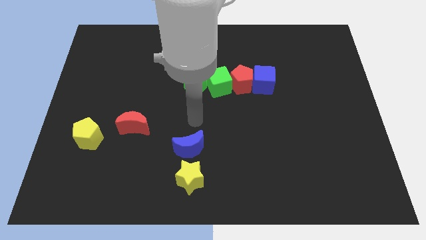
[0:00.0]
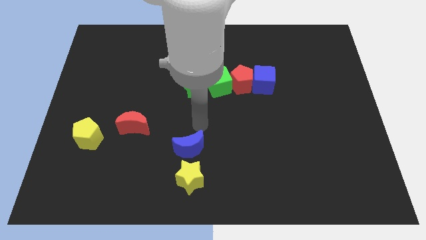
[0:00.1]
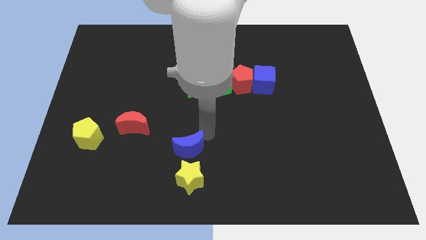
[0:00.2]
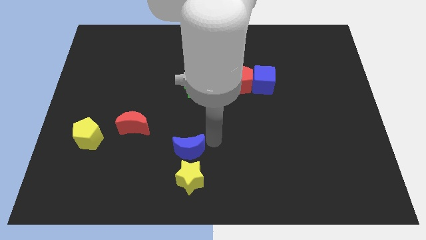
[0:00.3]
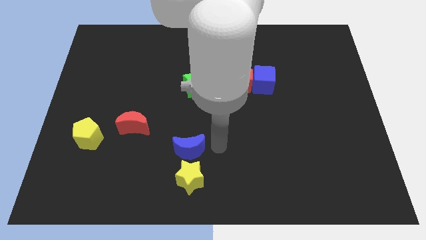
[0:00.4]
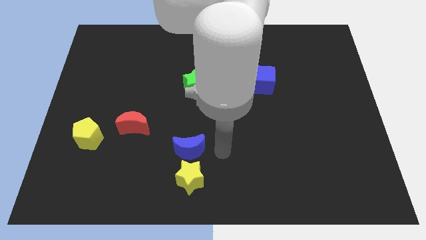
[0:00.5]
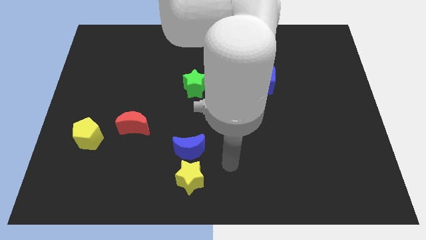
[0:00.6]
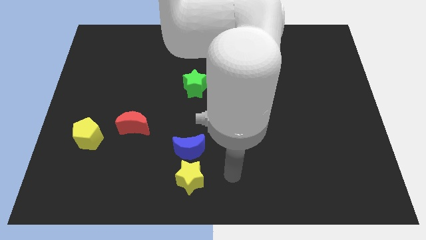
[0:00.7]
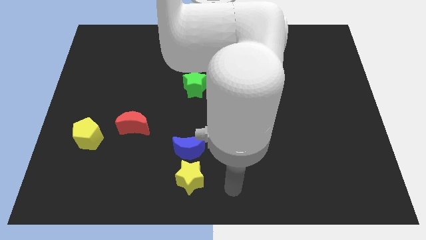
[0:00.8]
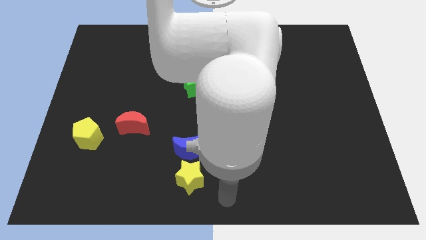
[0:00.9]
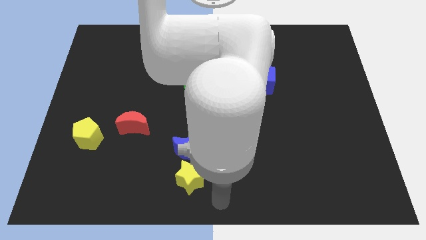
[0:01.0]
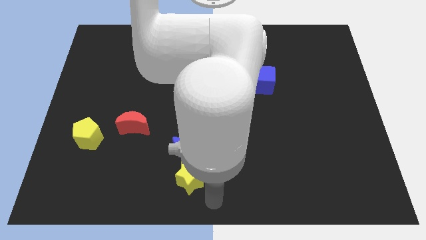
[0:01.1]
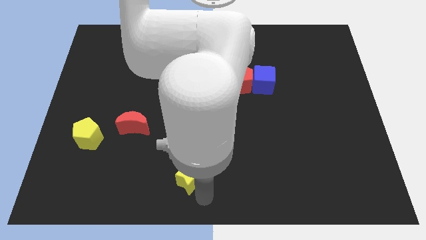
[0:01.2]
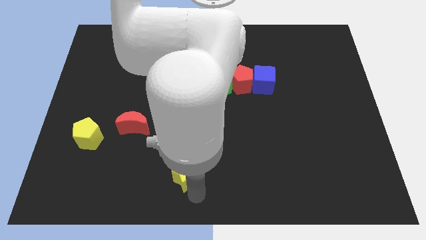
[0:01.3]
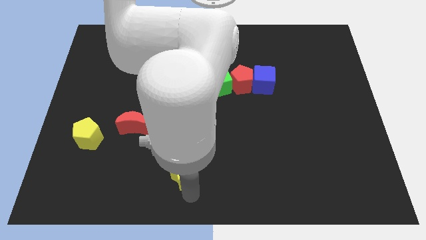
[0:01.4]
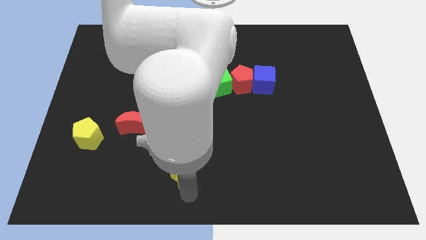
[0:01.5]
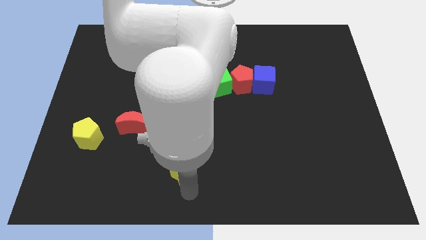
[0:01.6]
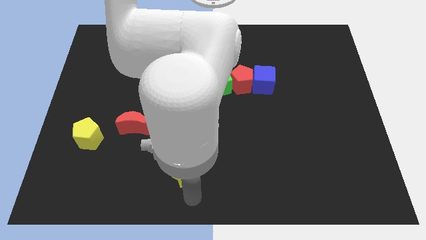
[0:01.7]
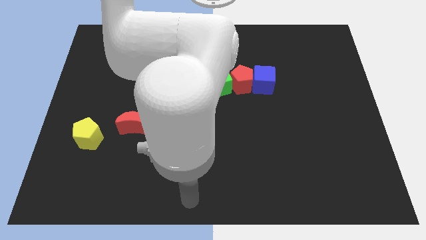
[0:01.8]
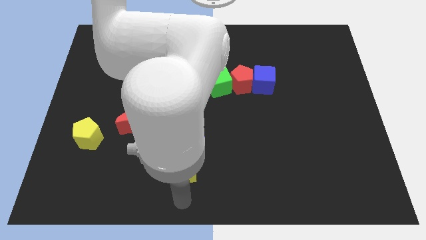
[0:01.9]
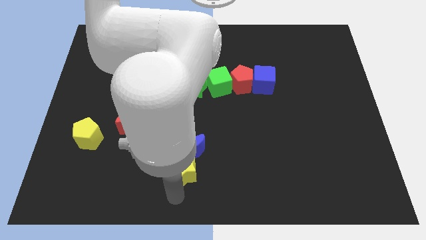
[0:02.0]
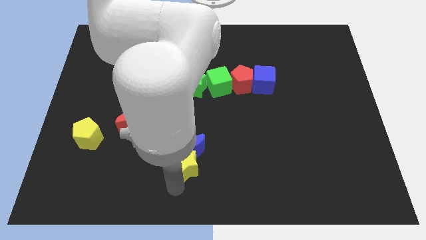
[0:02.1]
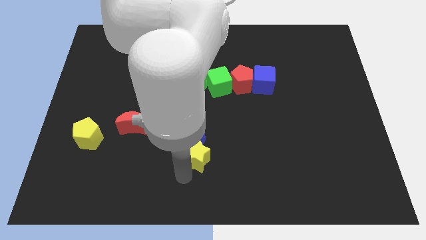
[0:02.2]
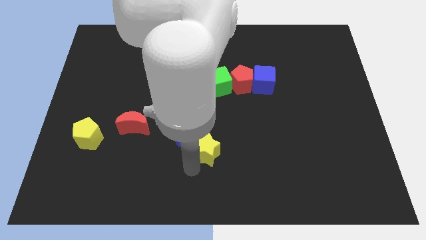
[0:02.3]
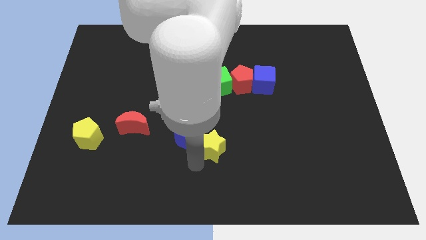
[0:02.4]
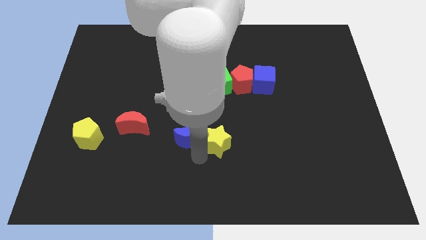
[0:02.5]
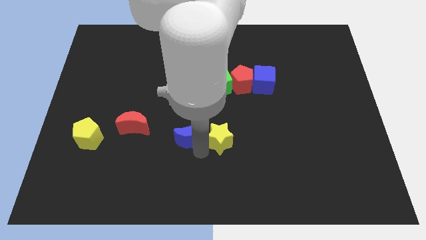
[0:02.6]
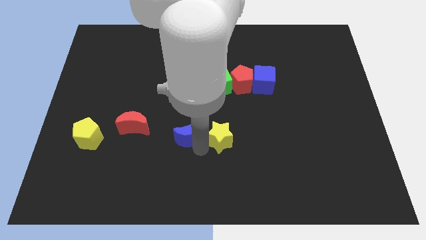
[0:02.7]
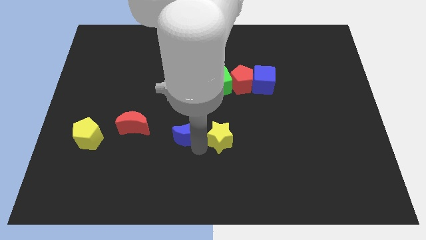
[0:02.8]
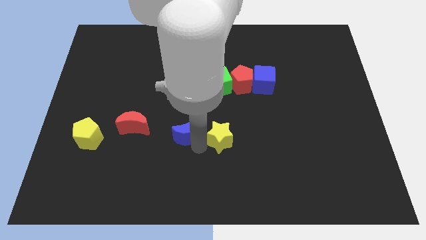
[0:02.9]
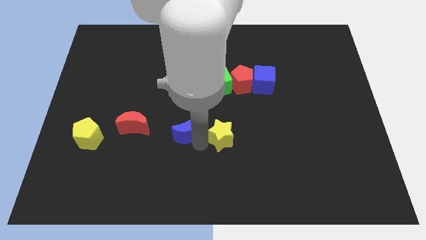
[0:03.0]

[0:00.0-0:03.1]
push yellow star to the right of blue moon

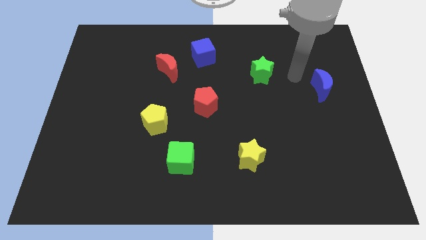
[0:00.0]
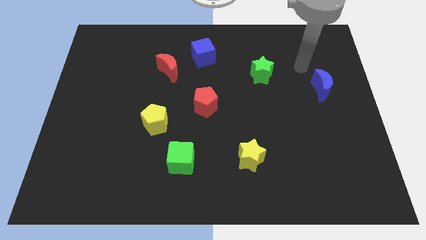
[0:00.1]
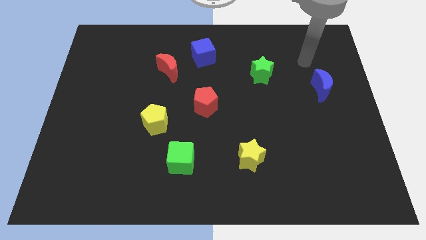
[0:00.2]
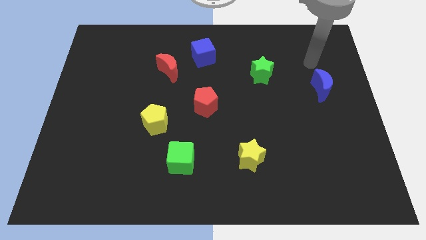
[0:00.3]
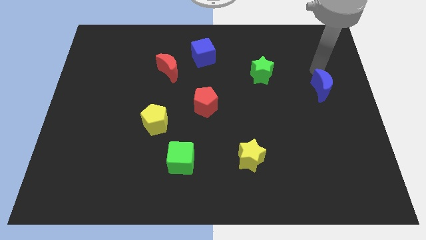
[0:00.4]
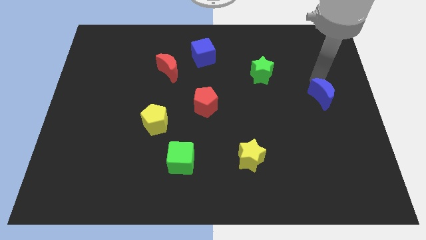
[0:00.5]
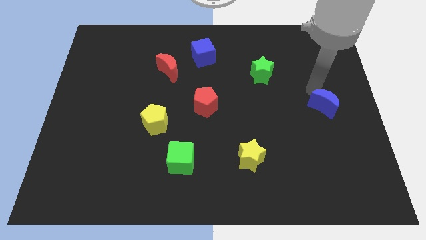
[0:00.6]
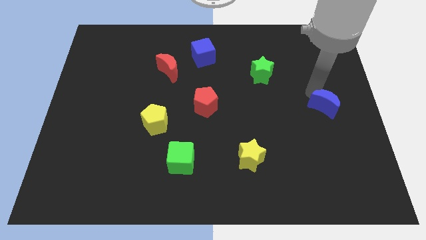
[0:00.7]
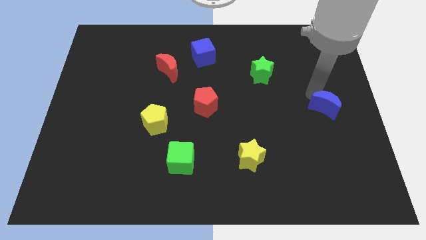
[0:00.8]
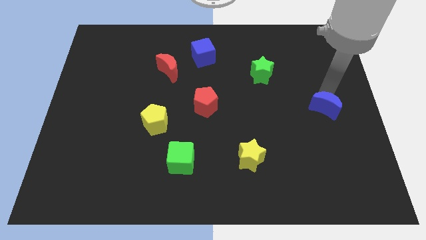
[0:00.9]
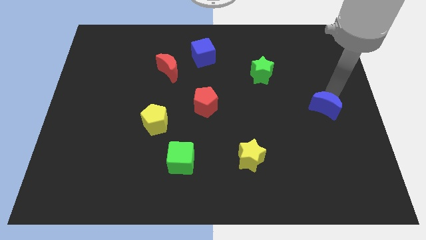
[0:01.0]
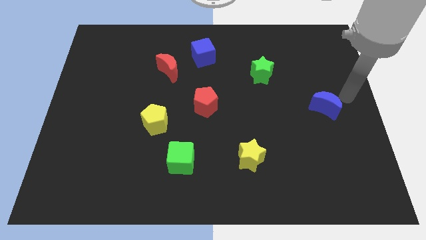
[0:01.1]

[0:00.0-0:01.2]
push the blue moon towards down a bit

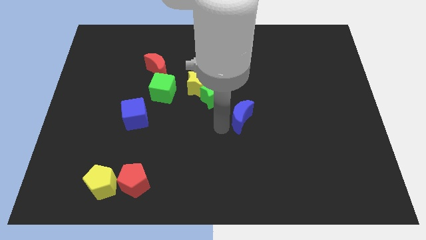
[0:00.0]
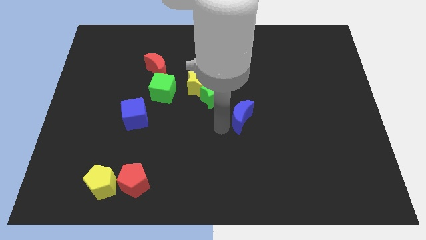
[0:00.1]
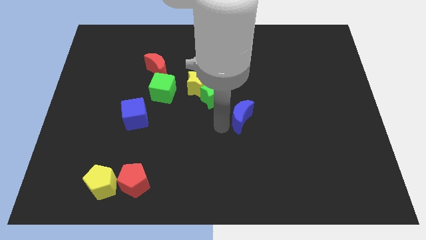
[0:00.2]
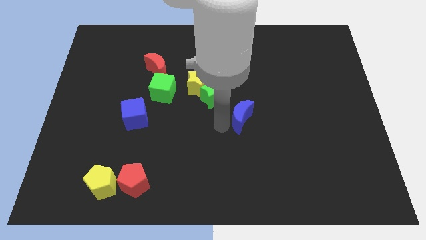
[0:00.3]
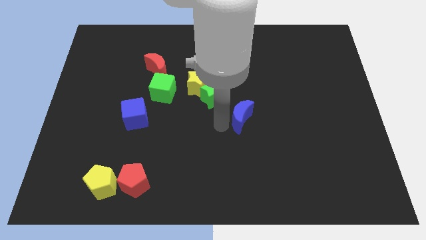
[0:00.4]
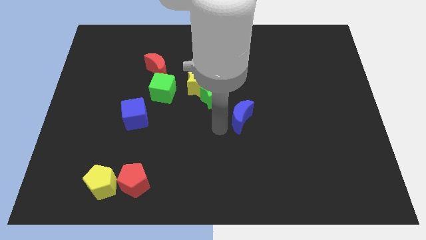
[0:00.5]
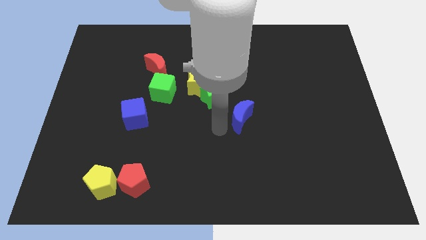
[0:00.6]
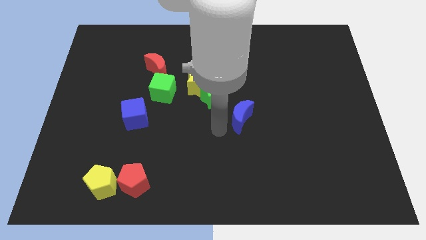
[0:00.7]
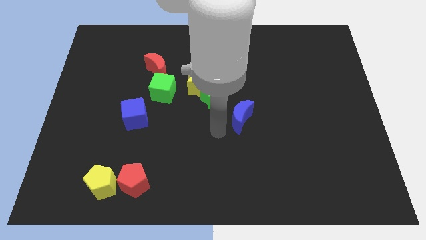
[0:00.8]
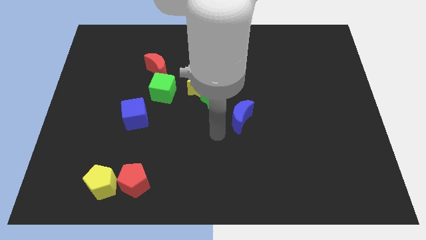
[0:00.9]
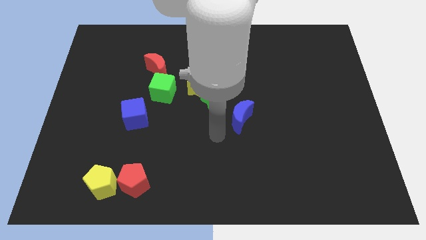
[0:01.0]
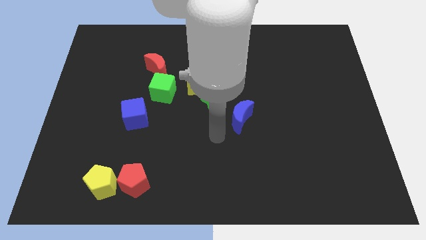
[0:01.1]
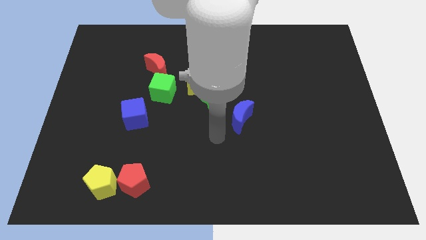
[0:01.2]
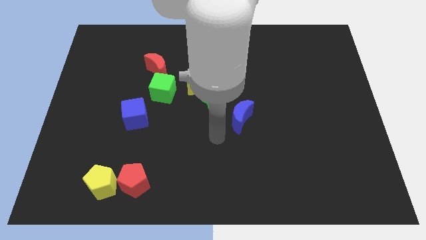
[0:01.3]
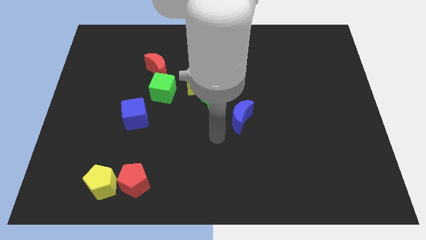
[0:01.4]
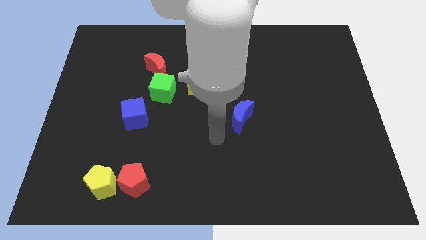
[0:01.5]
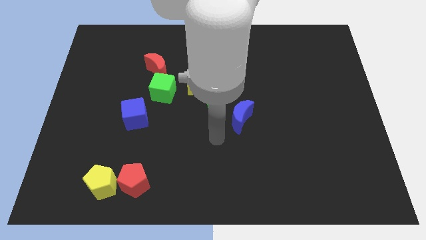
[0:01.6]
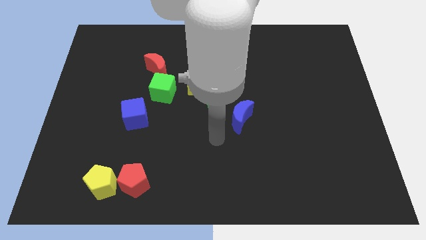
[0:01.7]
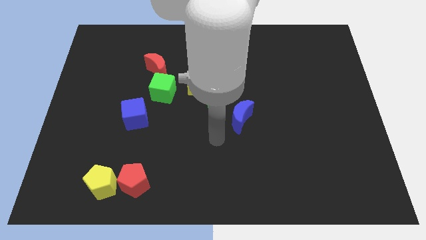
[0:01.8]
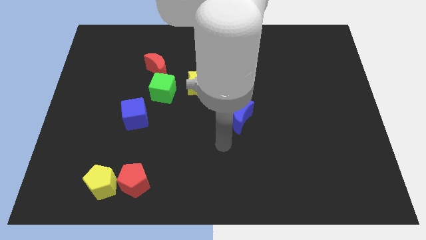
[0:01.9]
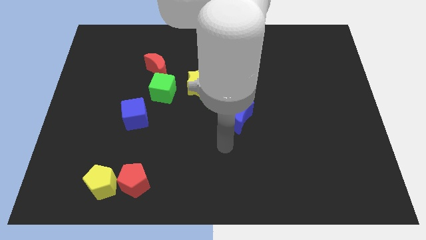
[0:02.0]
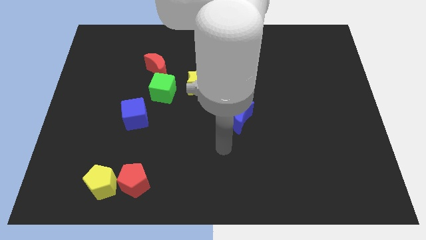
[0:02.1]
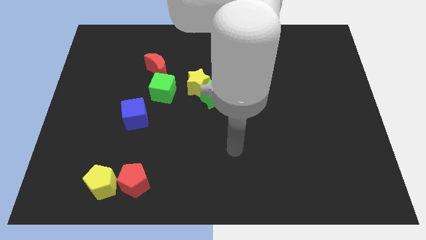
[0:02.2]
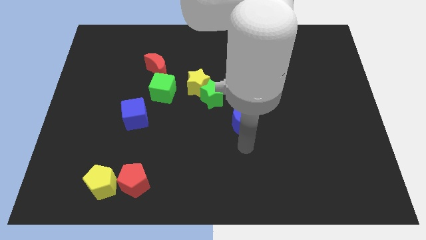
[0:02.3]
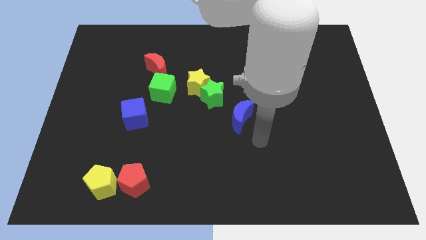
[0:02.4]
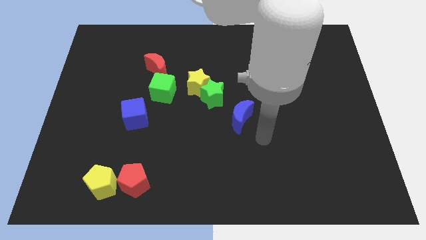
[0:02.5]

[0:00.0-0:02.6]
place your arm at the bottom right side of blue crescent

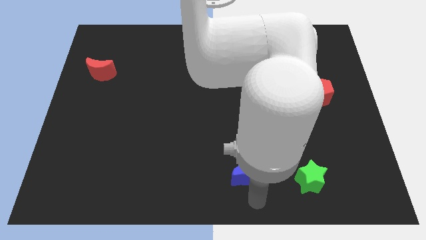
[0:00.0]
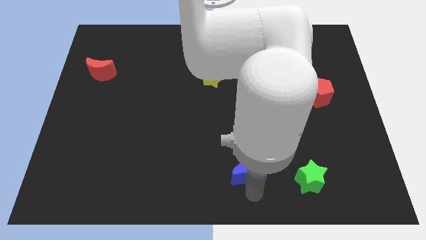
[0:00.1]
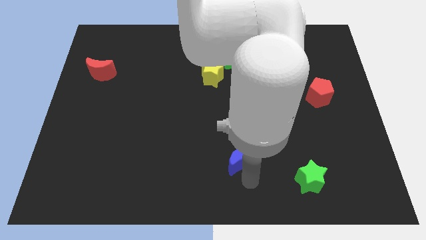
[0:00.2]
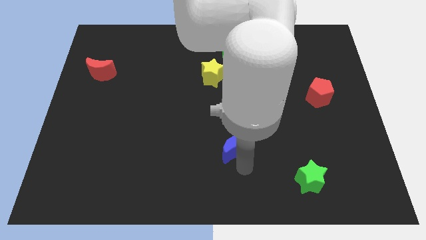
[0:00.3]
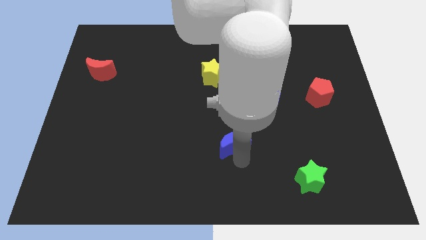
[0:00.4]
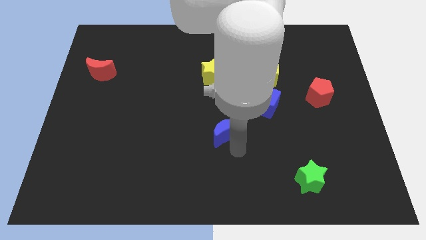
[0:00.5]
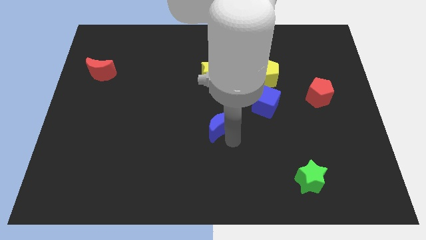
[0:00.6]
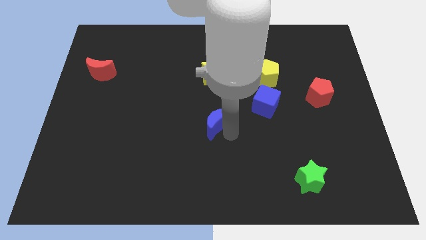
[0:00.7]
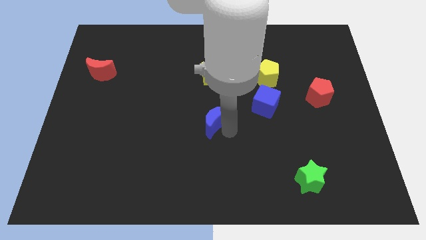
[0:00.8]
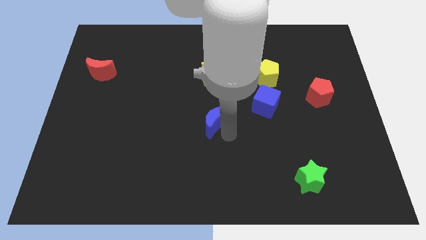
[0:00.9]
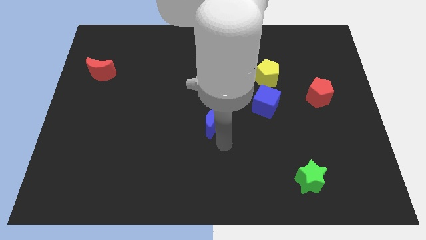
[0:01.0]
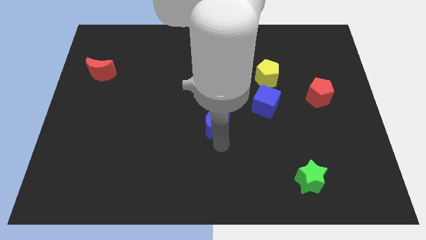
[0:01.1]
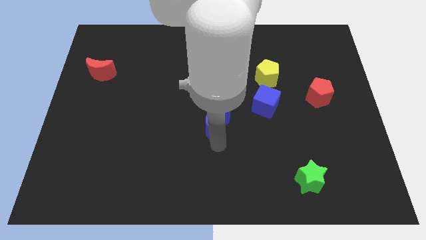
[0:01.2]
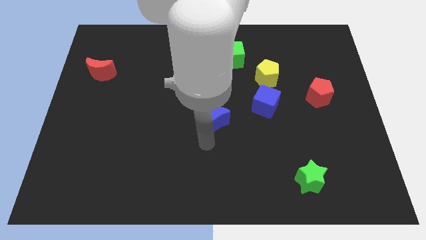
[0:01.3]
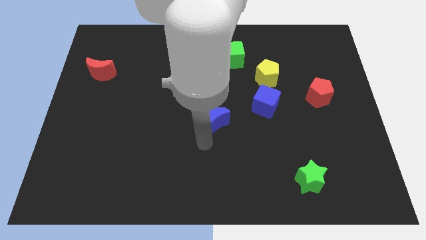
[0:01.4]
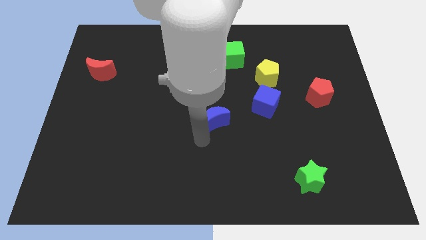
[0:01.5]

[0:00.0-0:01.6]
move the blue crescent towards the bottom side of the yellow star

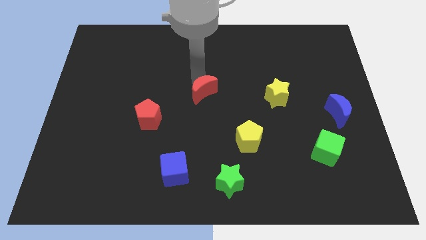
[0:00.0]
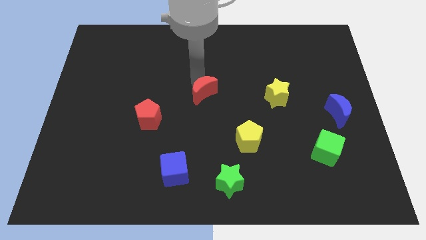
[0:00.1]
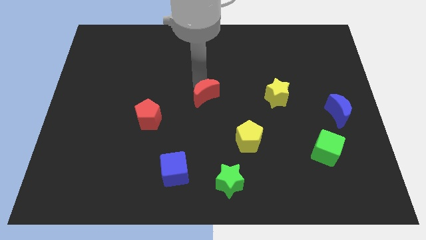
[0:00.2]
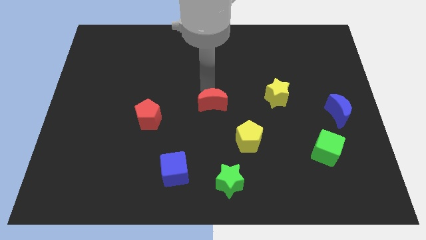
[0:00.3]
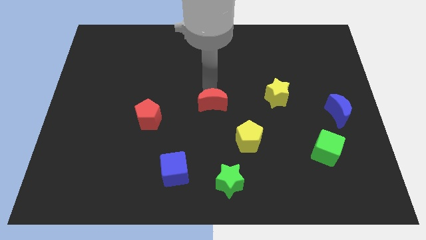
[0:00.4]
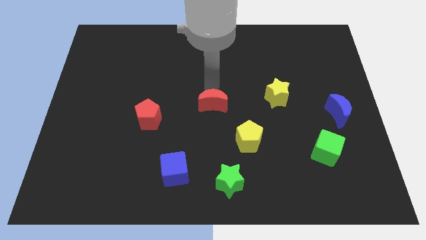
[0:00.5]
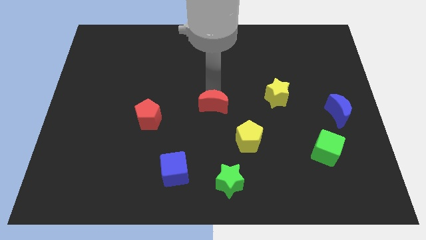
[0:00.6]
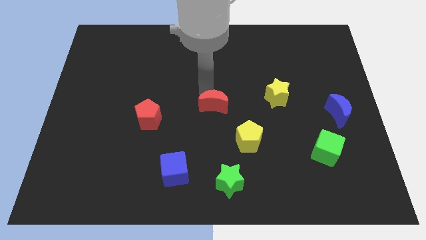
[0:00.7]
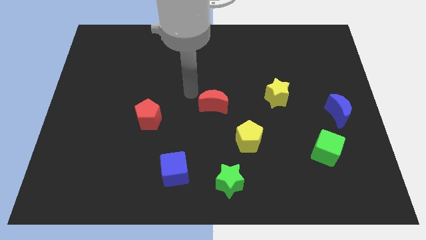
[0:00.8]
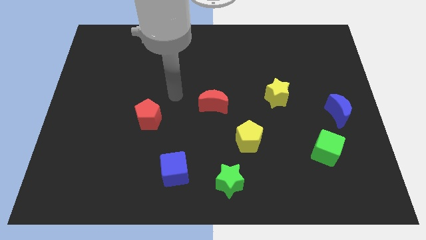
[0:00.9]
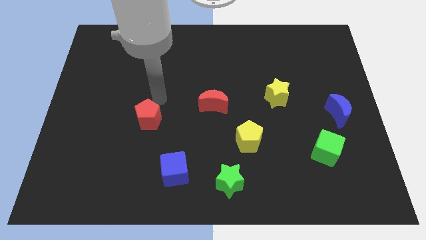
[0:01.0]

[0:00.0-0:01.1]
push red crescent into center of the board
